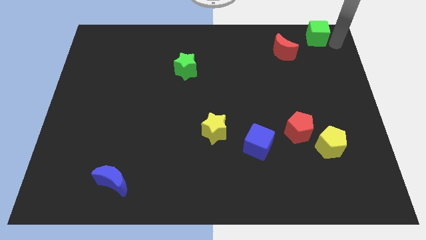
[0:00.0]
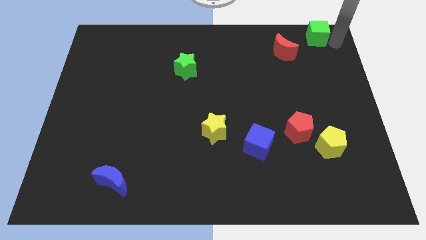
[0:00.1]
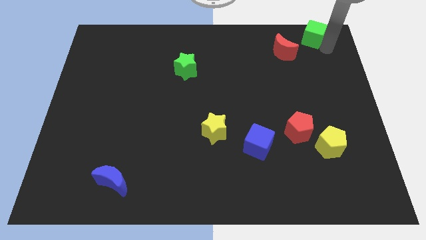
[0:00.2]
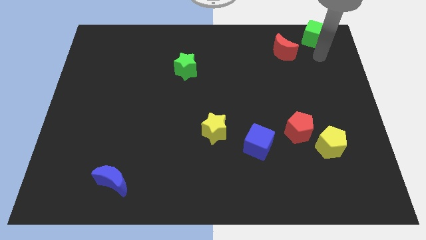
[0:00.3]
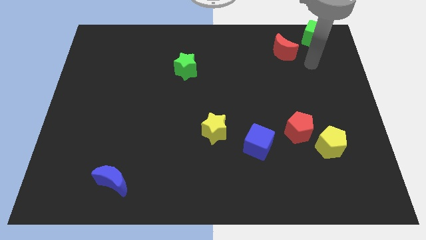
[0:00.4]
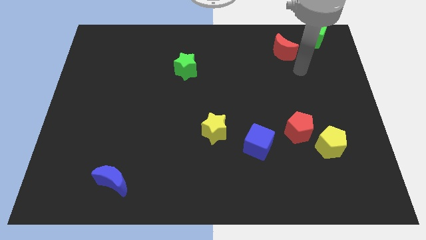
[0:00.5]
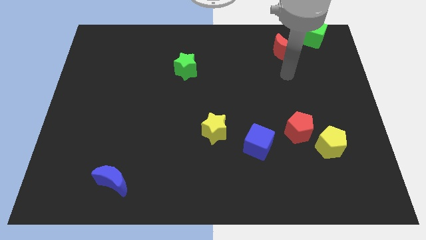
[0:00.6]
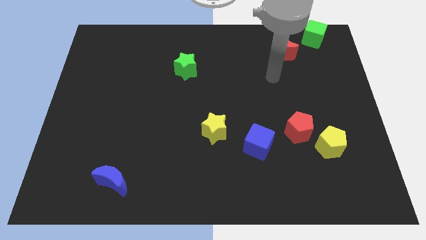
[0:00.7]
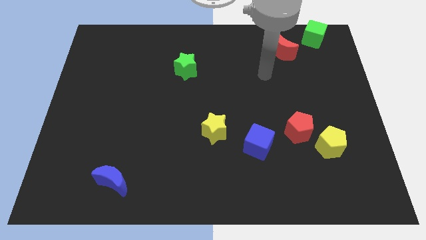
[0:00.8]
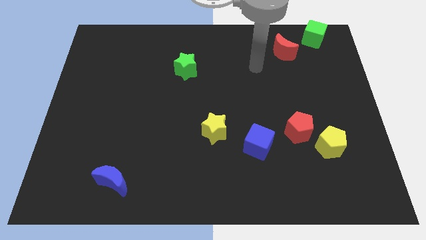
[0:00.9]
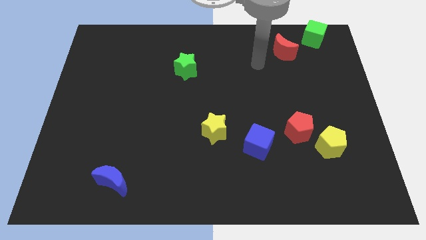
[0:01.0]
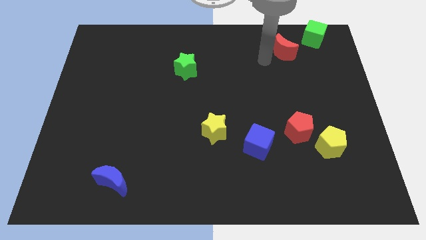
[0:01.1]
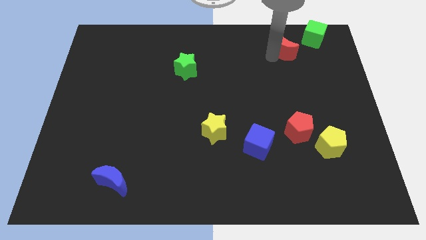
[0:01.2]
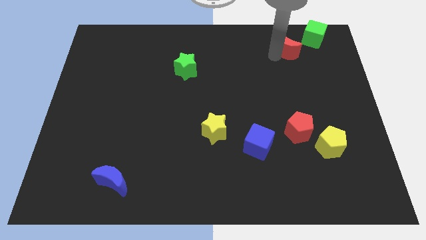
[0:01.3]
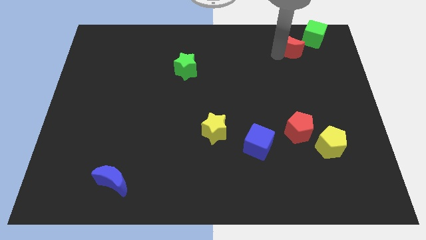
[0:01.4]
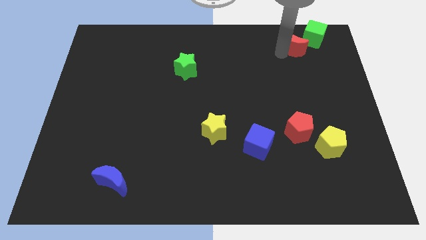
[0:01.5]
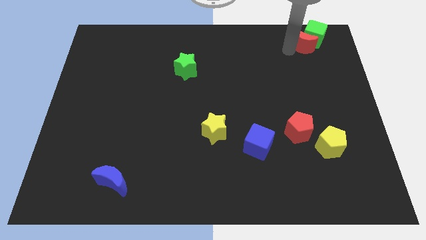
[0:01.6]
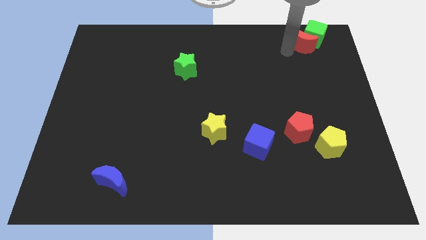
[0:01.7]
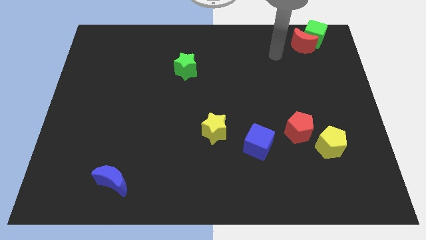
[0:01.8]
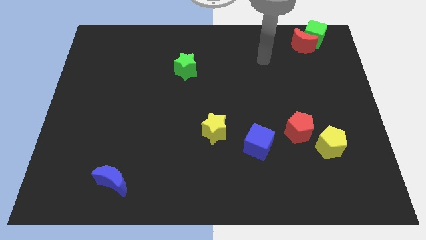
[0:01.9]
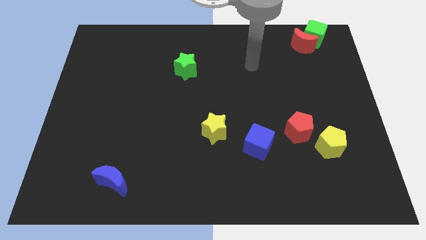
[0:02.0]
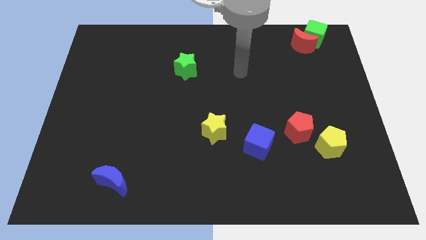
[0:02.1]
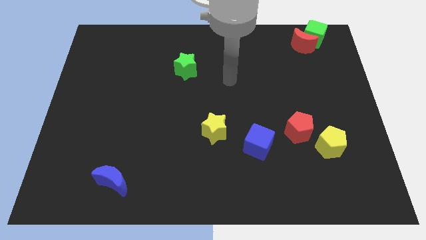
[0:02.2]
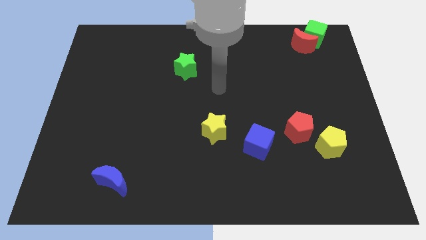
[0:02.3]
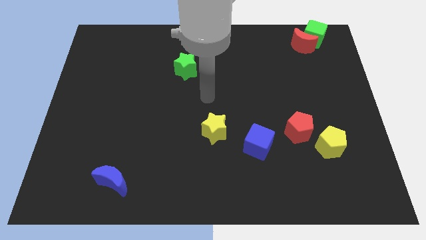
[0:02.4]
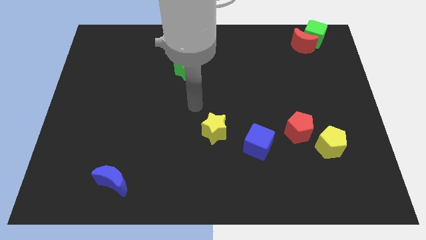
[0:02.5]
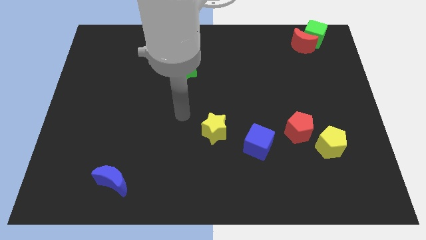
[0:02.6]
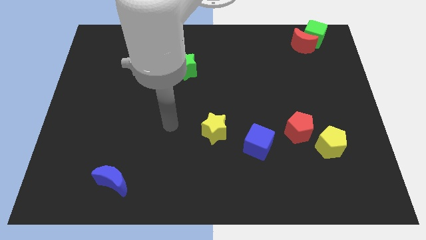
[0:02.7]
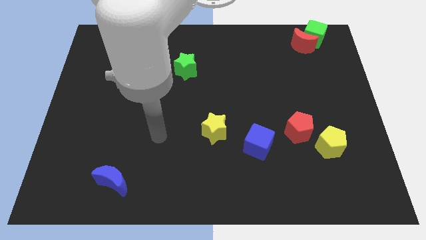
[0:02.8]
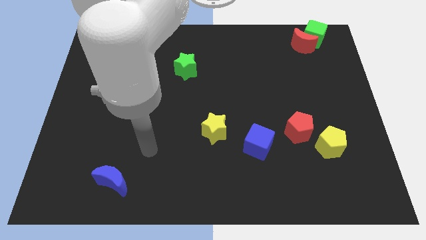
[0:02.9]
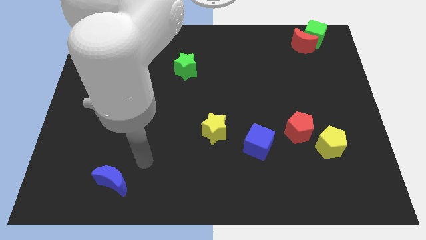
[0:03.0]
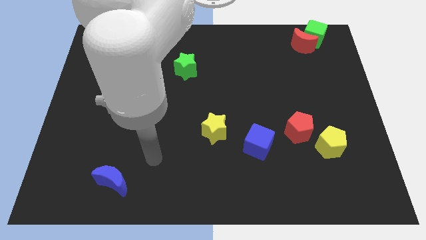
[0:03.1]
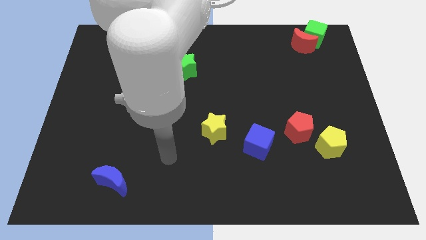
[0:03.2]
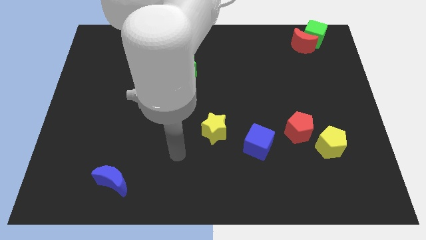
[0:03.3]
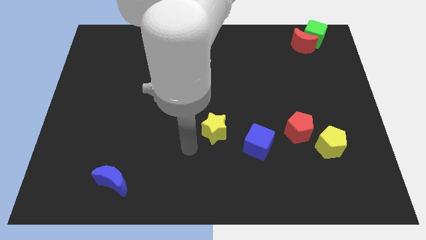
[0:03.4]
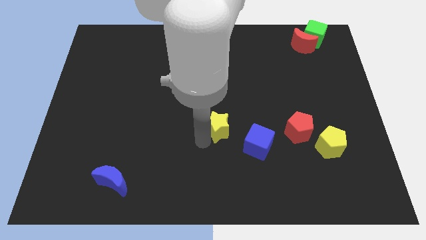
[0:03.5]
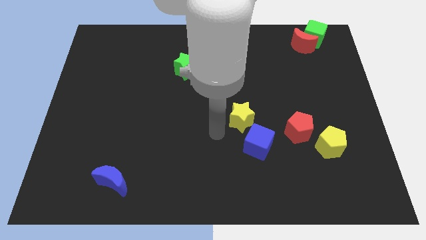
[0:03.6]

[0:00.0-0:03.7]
push the red moon into the green cube

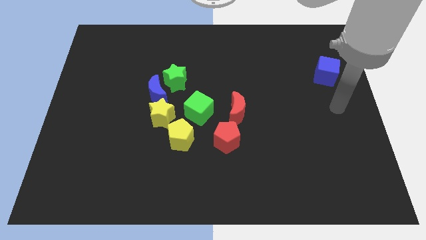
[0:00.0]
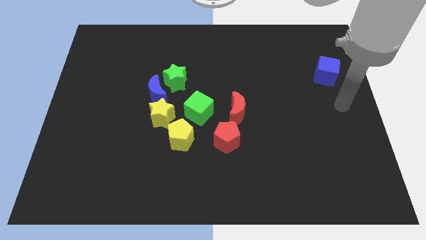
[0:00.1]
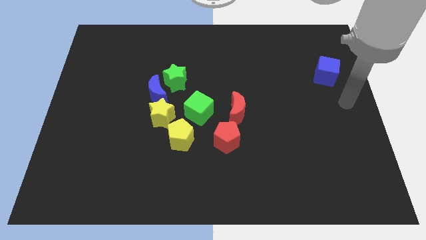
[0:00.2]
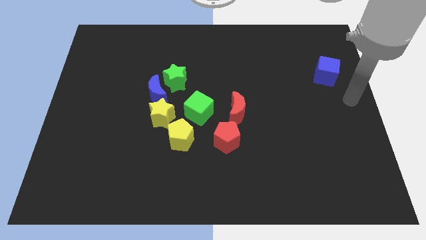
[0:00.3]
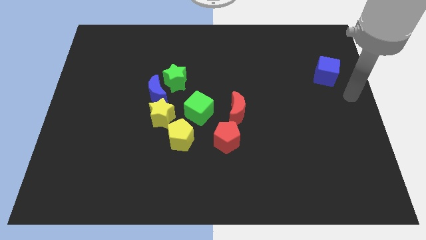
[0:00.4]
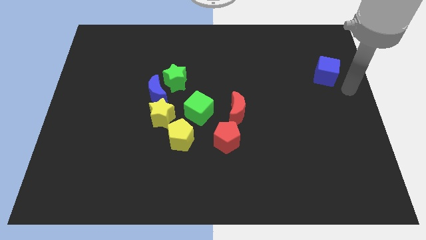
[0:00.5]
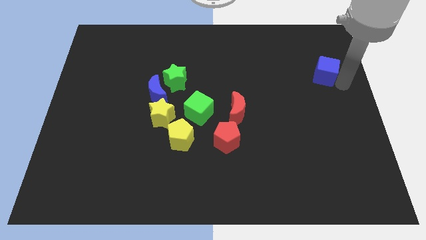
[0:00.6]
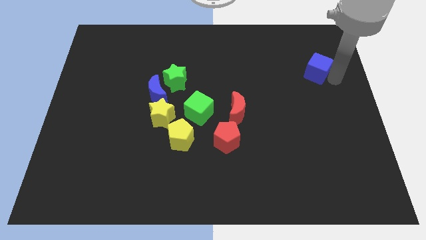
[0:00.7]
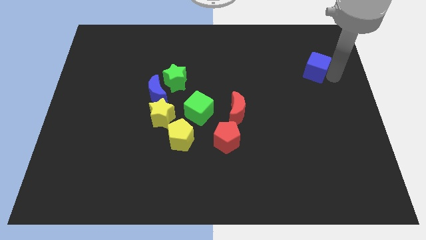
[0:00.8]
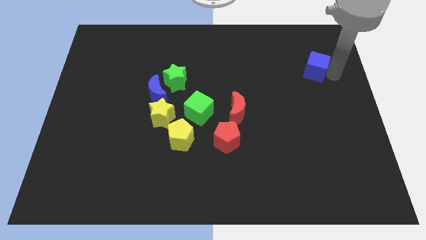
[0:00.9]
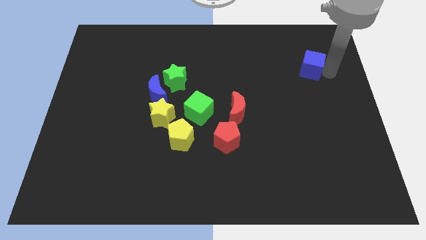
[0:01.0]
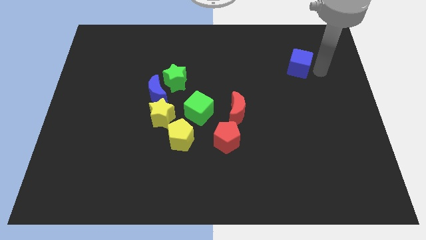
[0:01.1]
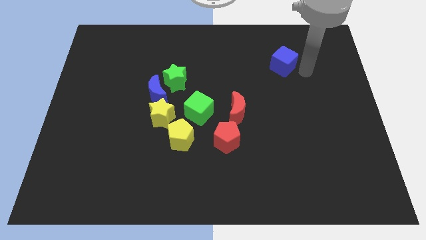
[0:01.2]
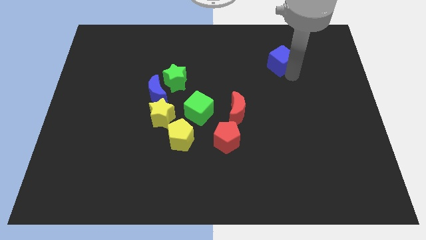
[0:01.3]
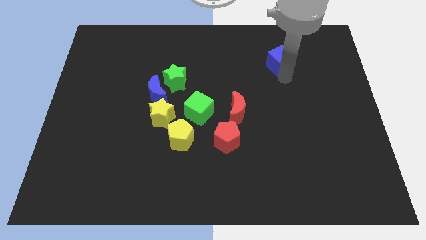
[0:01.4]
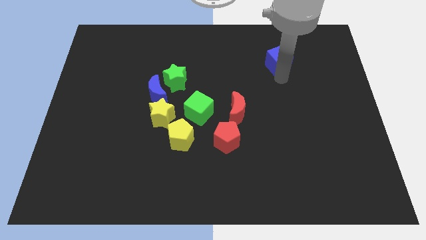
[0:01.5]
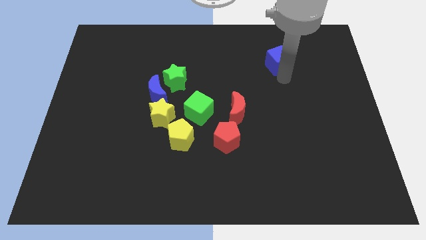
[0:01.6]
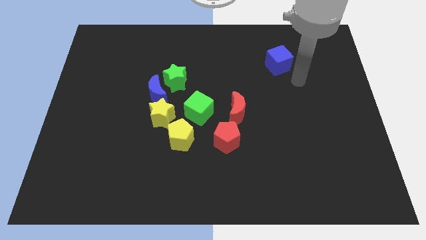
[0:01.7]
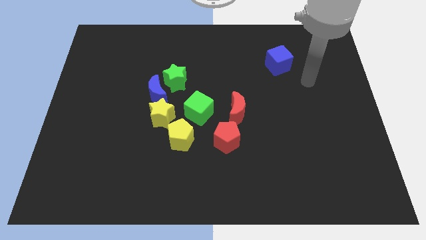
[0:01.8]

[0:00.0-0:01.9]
push the blue cube towards the group of blocks

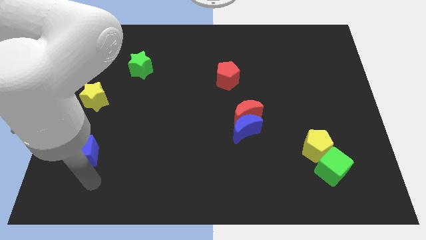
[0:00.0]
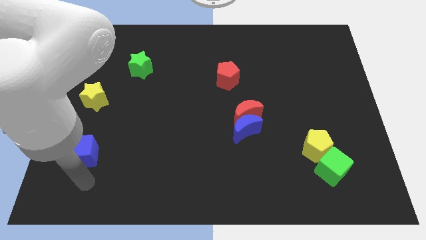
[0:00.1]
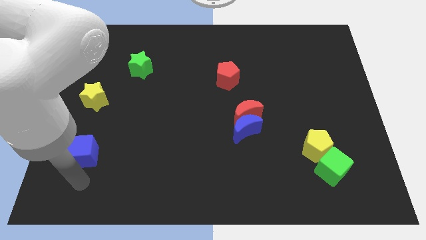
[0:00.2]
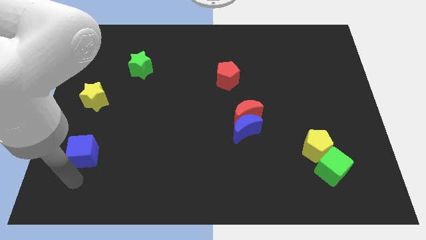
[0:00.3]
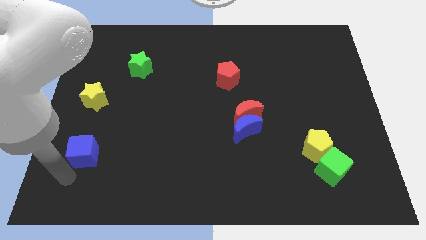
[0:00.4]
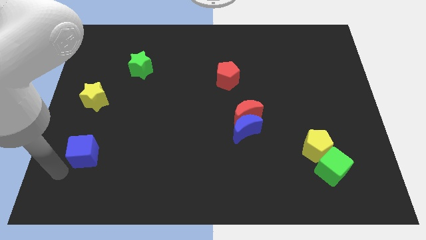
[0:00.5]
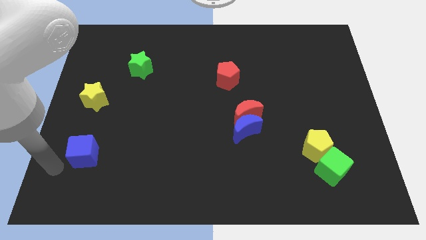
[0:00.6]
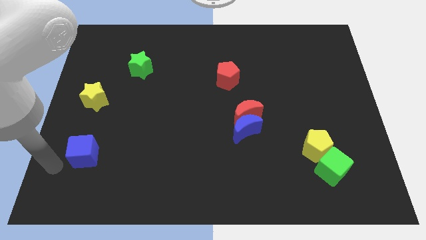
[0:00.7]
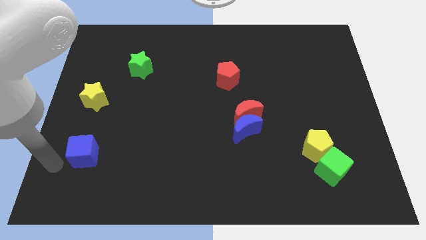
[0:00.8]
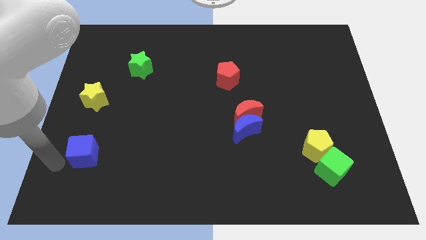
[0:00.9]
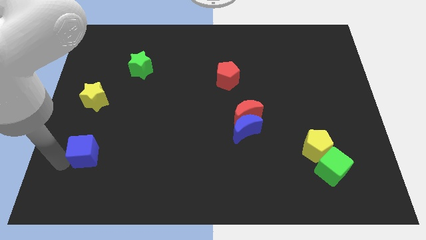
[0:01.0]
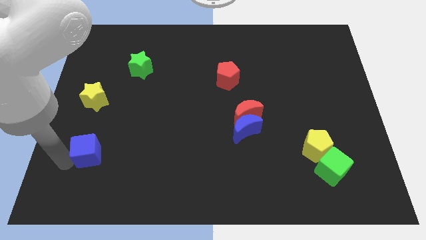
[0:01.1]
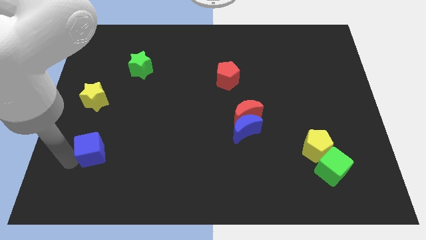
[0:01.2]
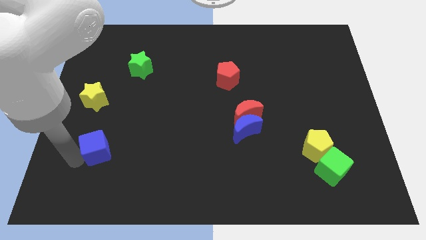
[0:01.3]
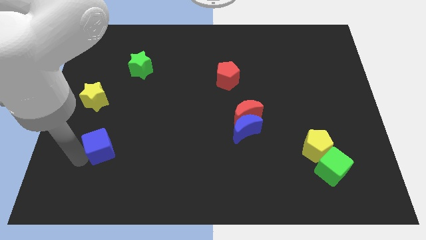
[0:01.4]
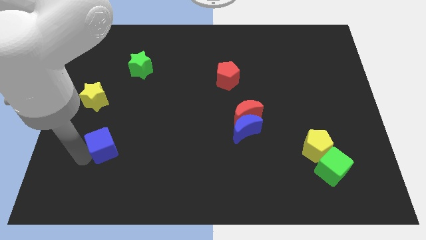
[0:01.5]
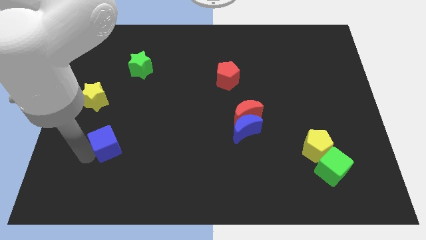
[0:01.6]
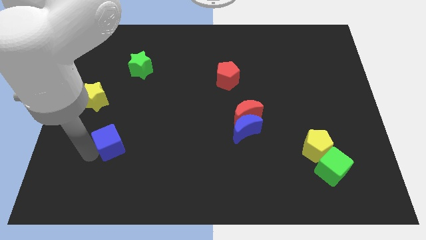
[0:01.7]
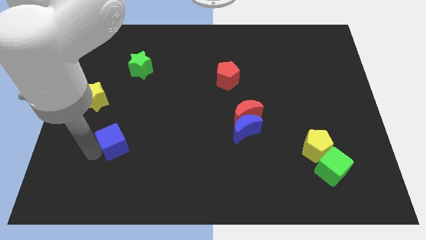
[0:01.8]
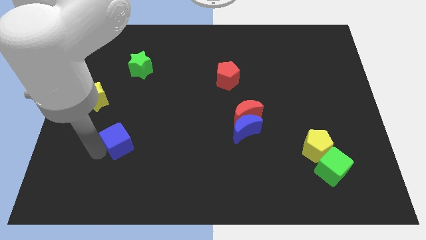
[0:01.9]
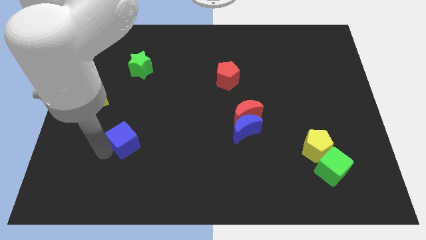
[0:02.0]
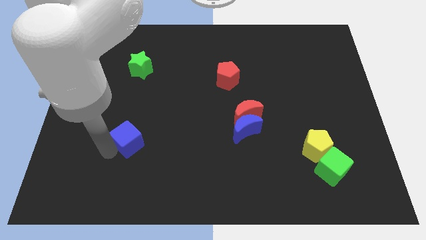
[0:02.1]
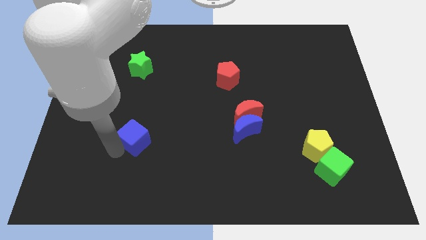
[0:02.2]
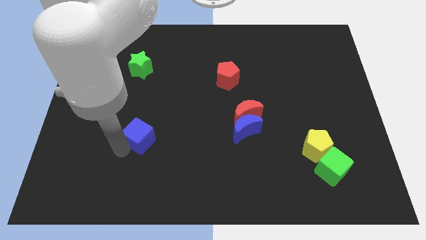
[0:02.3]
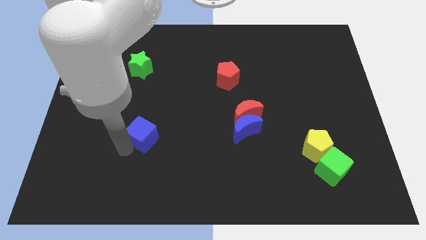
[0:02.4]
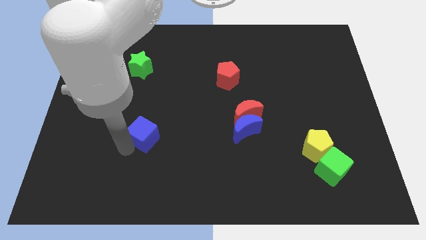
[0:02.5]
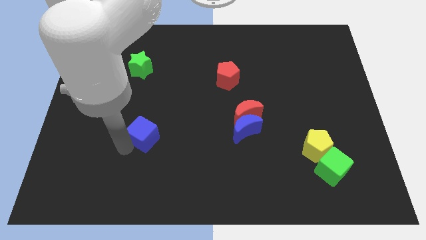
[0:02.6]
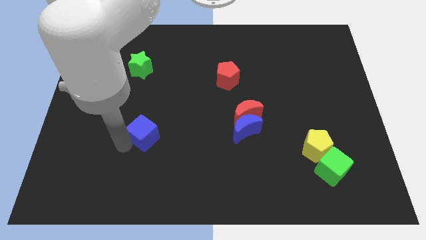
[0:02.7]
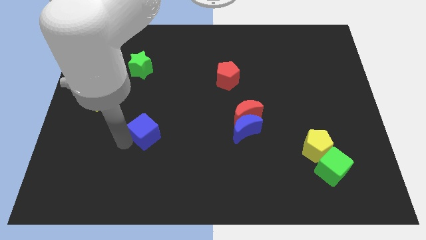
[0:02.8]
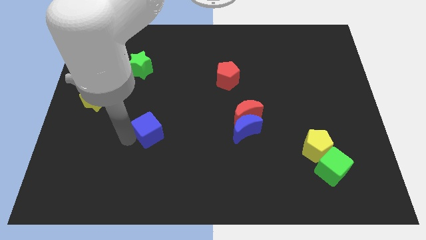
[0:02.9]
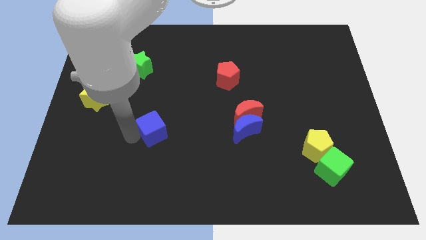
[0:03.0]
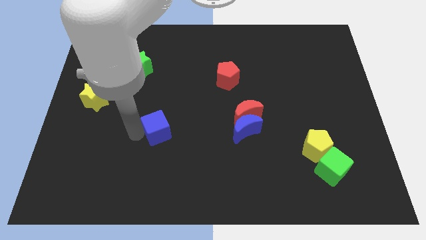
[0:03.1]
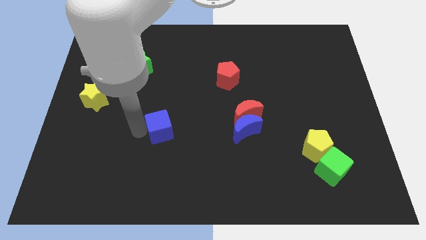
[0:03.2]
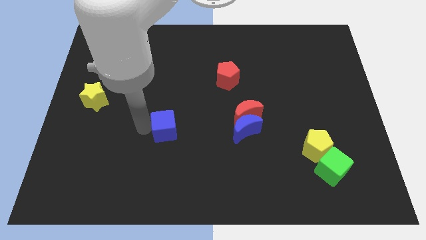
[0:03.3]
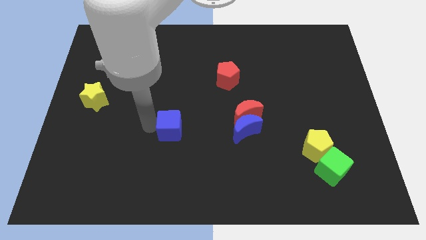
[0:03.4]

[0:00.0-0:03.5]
push the blue cube left to the blue crescent

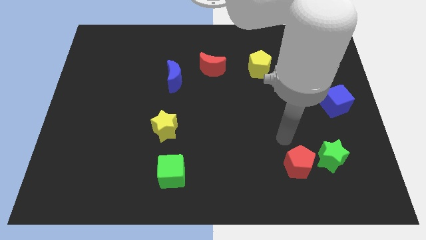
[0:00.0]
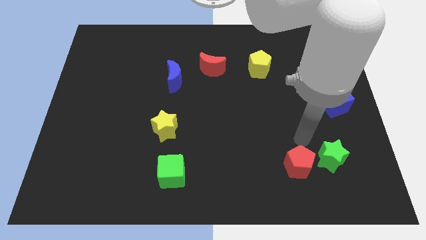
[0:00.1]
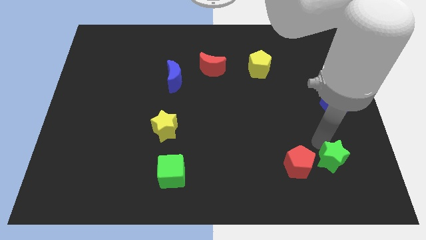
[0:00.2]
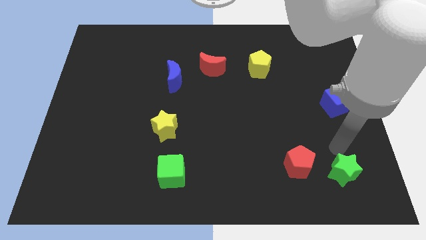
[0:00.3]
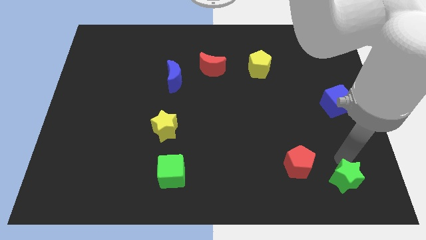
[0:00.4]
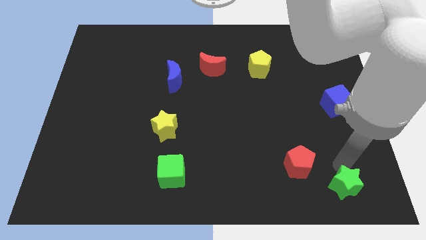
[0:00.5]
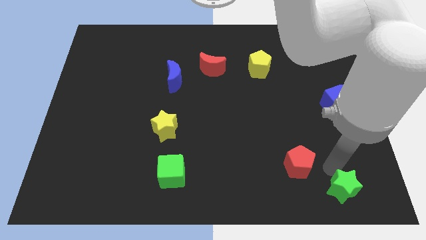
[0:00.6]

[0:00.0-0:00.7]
push the green star slightly to the bottom
